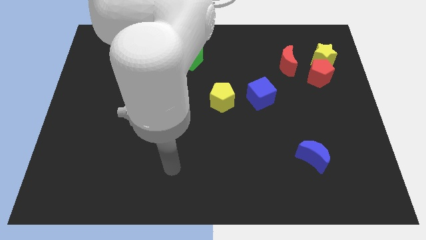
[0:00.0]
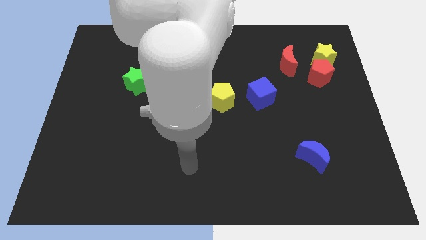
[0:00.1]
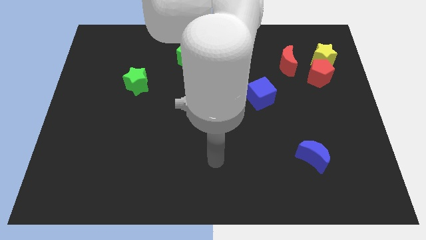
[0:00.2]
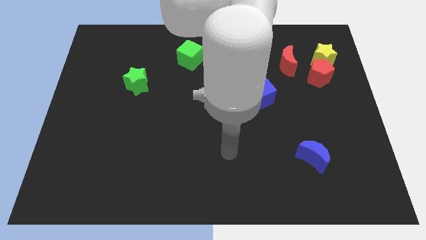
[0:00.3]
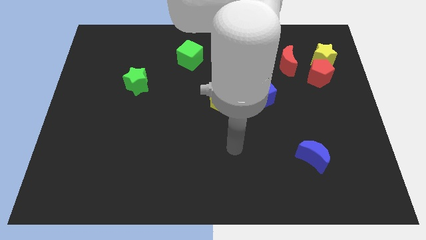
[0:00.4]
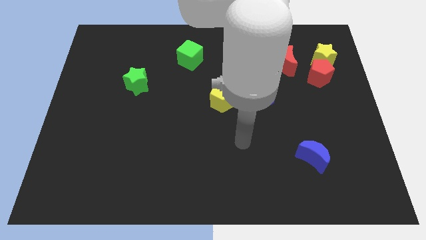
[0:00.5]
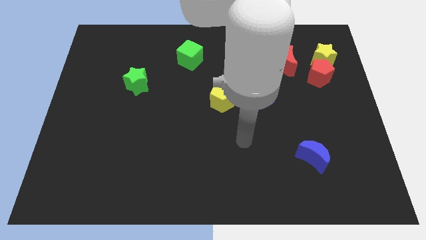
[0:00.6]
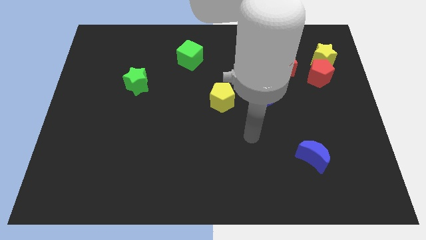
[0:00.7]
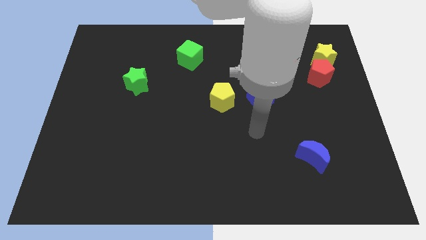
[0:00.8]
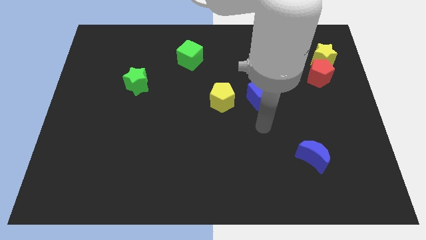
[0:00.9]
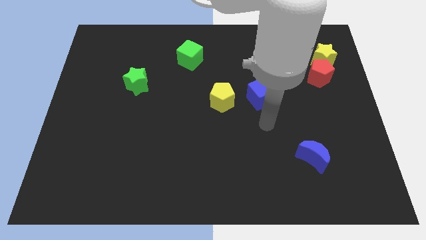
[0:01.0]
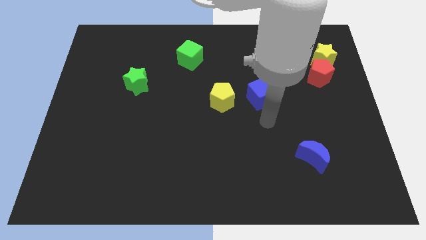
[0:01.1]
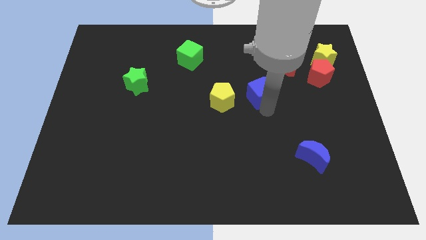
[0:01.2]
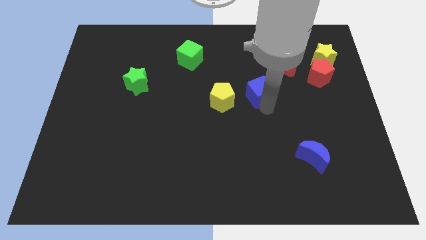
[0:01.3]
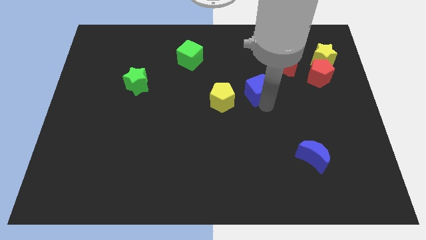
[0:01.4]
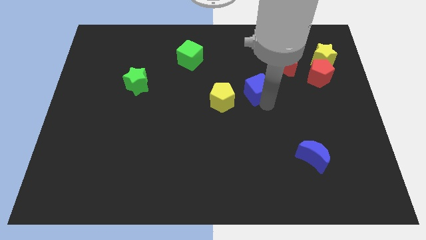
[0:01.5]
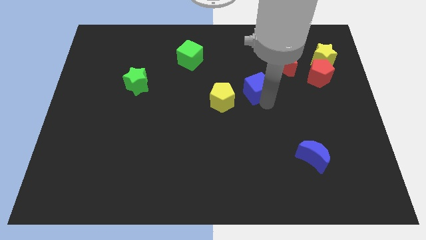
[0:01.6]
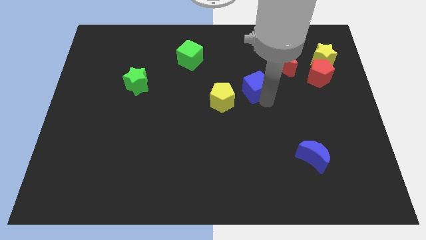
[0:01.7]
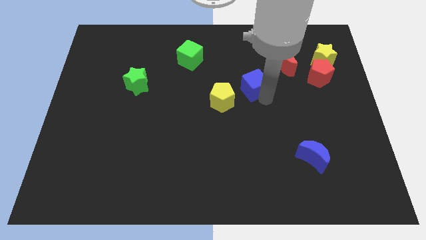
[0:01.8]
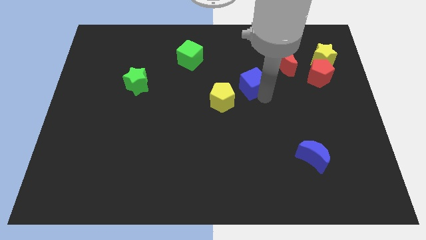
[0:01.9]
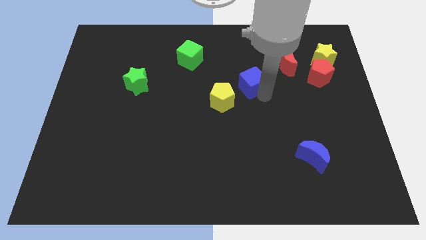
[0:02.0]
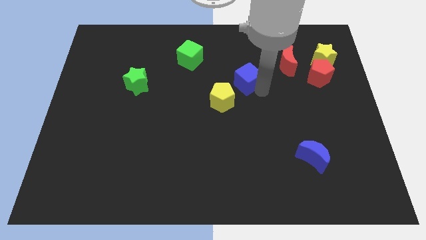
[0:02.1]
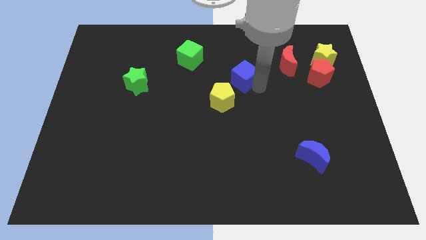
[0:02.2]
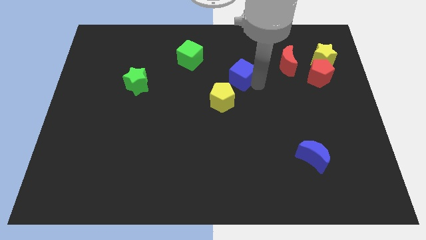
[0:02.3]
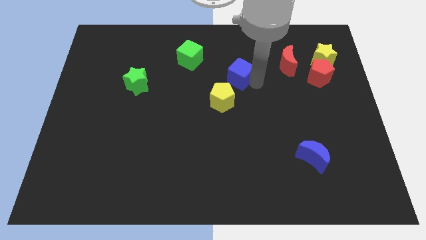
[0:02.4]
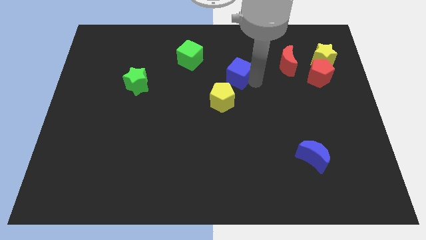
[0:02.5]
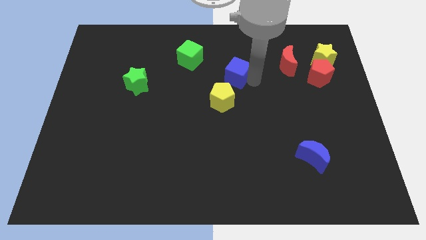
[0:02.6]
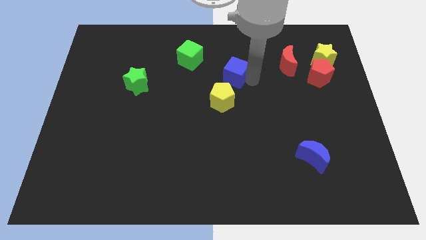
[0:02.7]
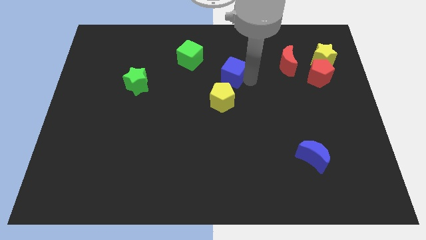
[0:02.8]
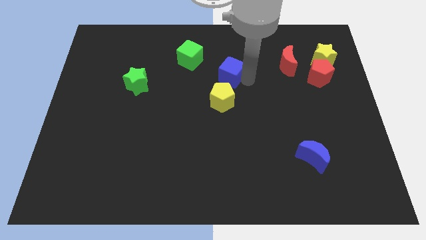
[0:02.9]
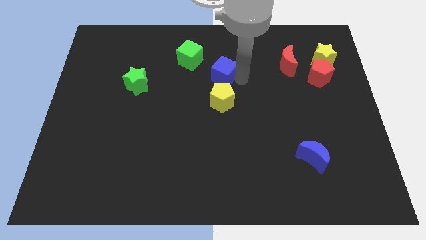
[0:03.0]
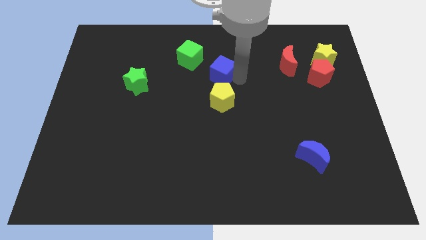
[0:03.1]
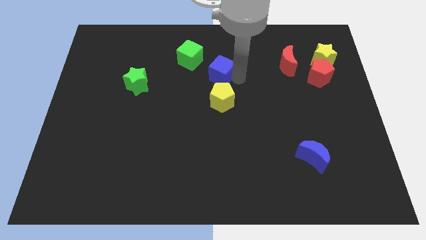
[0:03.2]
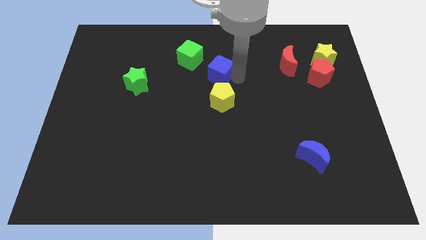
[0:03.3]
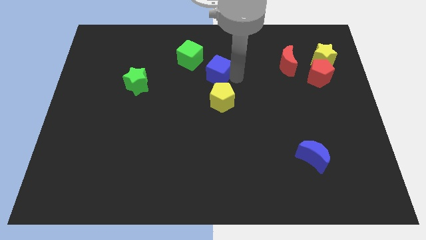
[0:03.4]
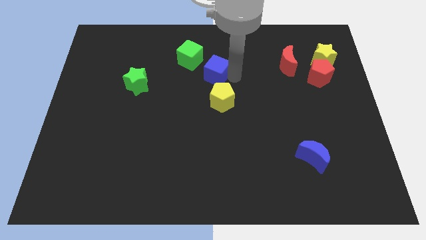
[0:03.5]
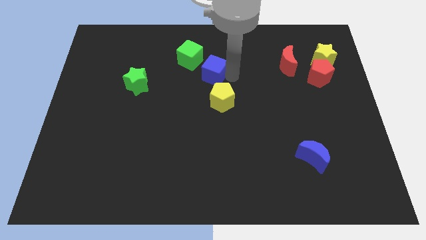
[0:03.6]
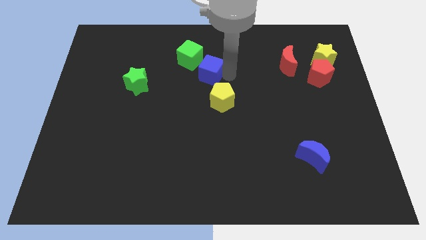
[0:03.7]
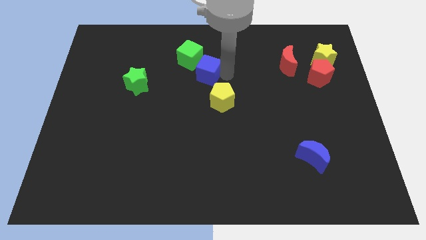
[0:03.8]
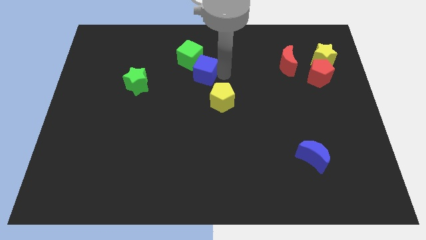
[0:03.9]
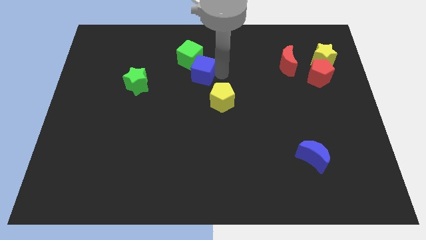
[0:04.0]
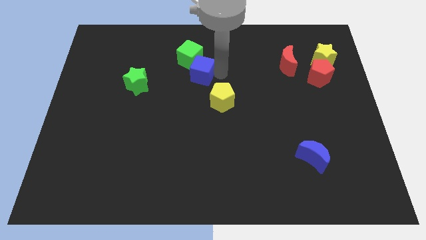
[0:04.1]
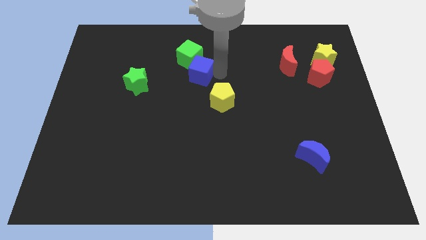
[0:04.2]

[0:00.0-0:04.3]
push the blue cube towards the green cube

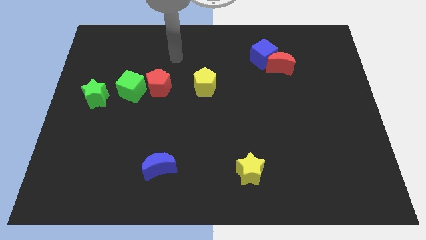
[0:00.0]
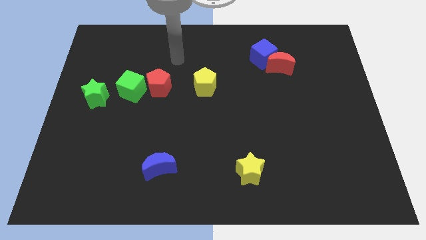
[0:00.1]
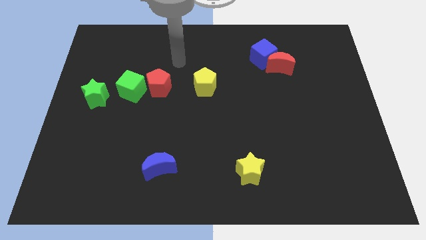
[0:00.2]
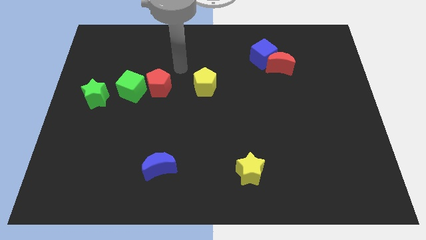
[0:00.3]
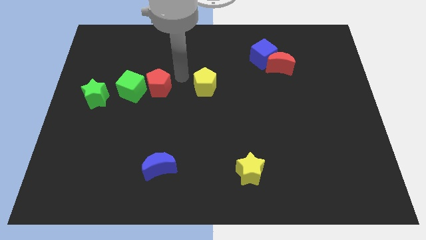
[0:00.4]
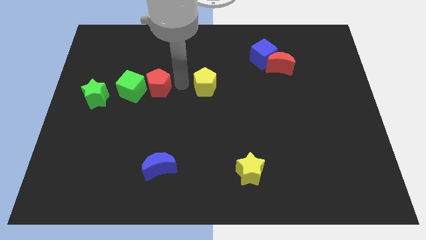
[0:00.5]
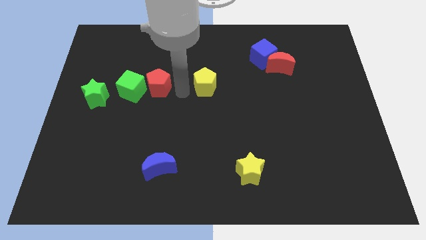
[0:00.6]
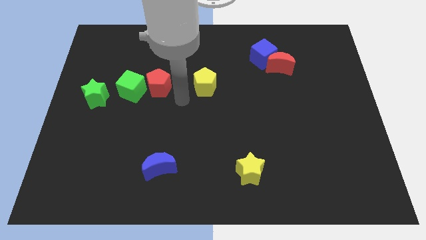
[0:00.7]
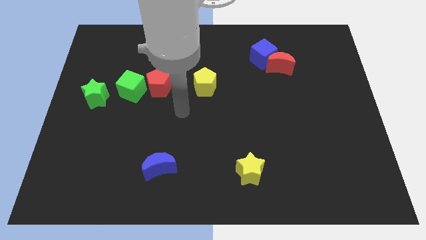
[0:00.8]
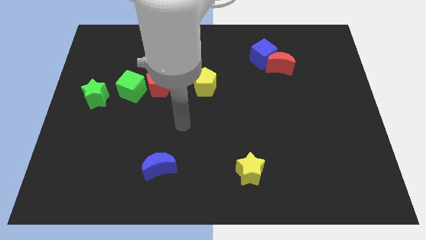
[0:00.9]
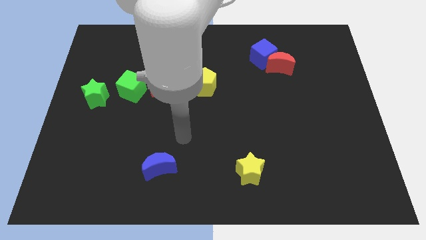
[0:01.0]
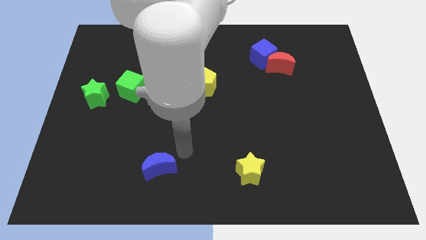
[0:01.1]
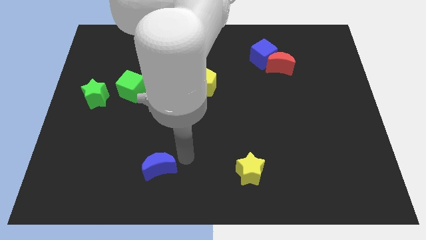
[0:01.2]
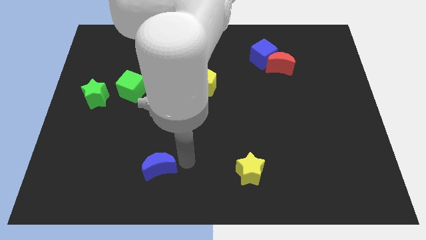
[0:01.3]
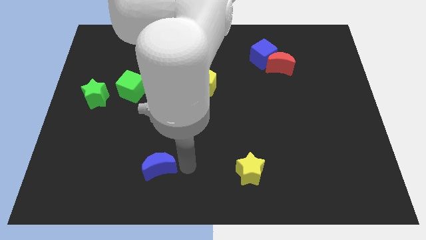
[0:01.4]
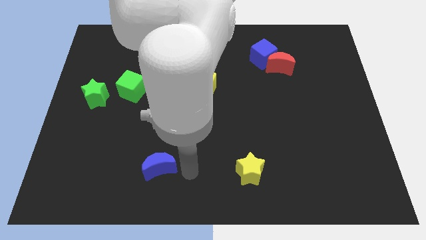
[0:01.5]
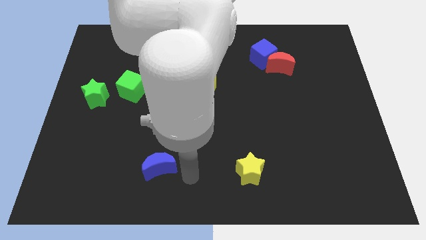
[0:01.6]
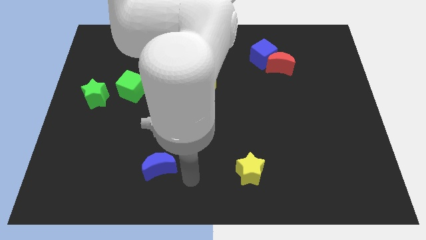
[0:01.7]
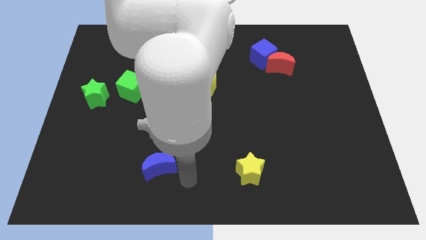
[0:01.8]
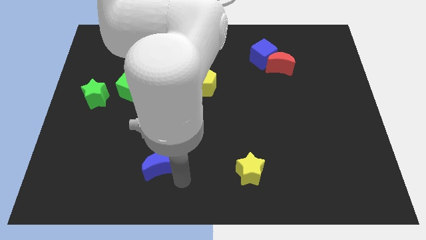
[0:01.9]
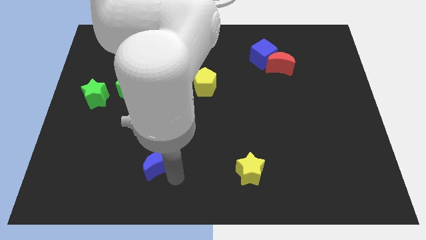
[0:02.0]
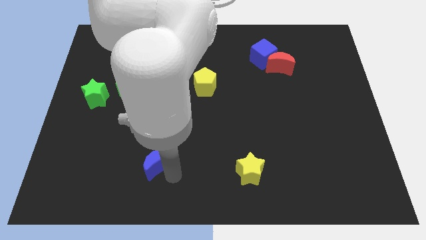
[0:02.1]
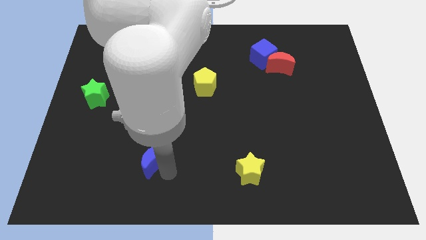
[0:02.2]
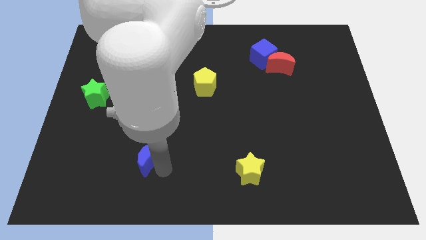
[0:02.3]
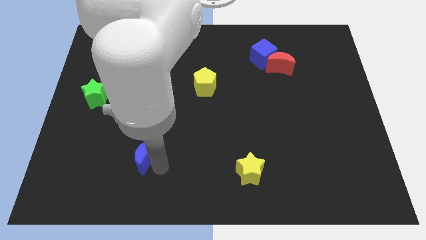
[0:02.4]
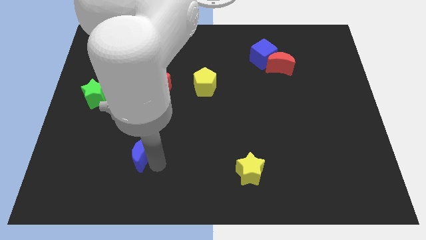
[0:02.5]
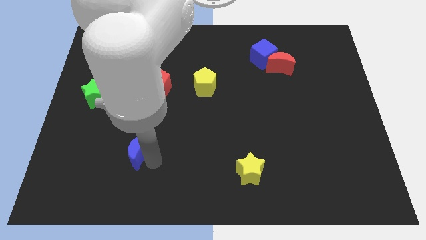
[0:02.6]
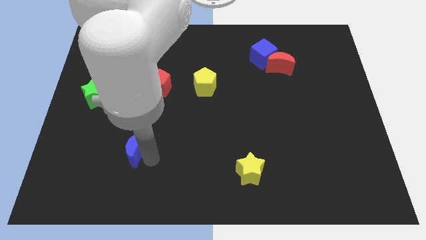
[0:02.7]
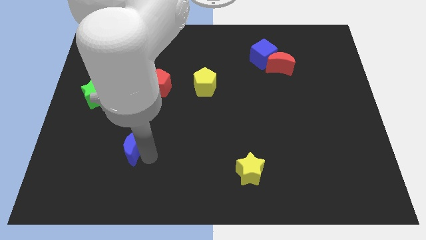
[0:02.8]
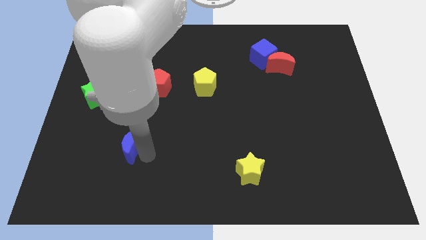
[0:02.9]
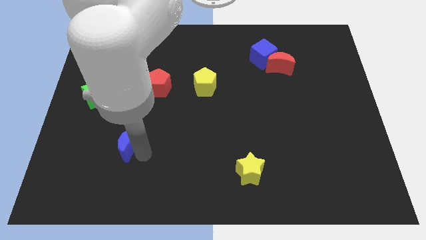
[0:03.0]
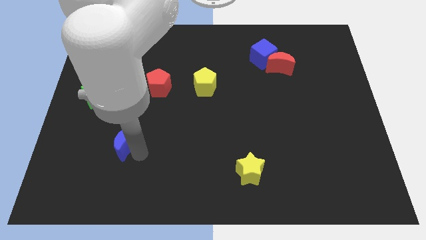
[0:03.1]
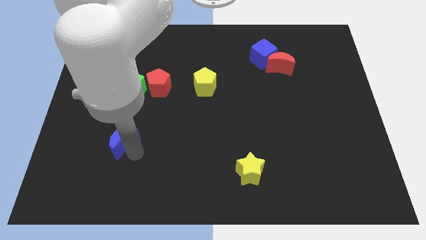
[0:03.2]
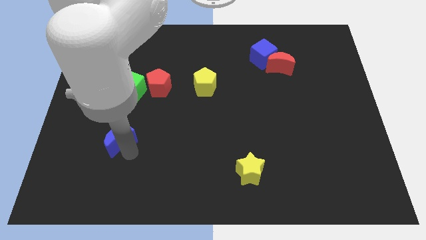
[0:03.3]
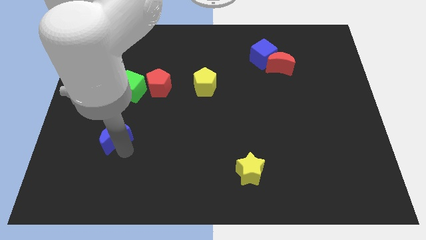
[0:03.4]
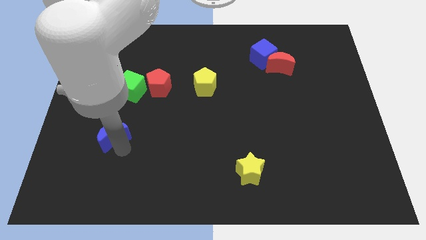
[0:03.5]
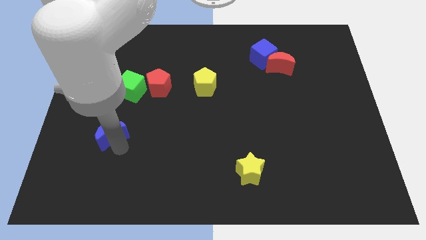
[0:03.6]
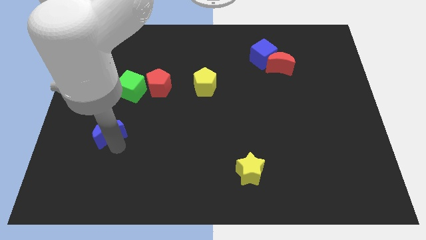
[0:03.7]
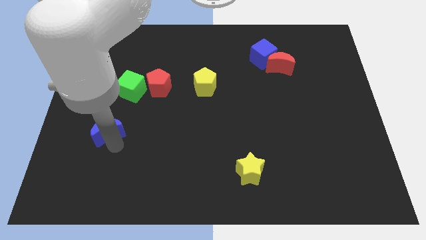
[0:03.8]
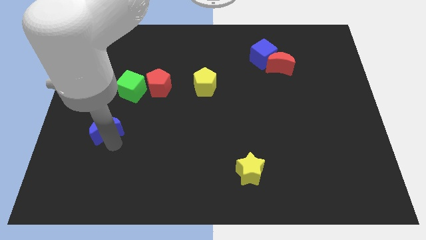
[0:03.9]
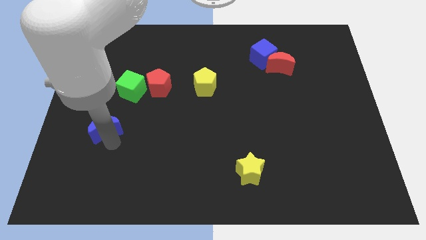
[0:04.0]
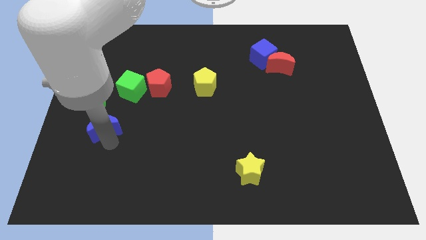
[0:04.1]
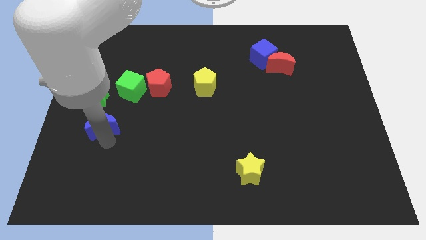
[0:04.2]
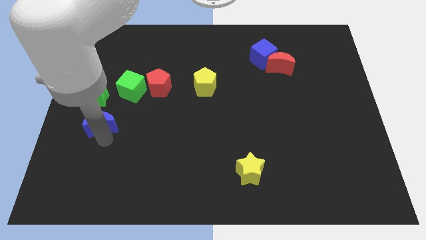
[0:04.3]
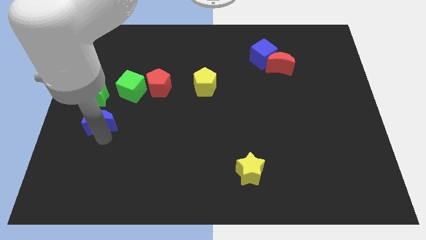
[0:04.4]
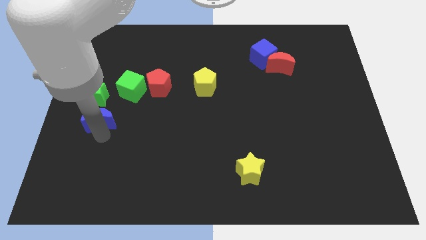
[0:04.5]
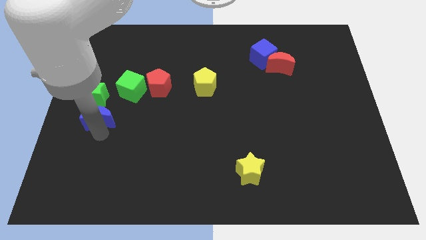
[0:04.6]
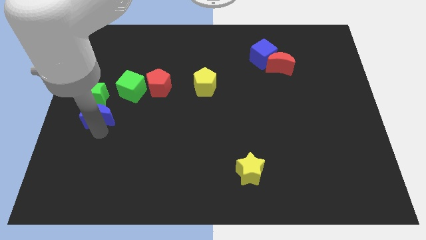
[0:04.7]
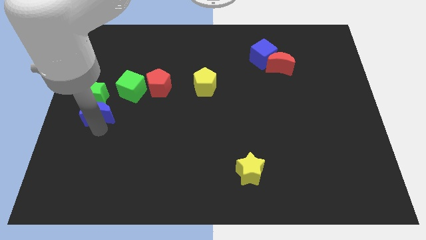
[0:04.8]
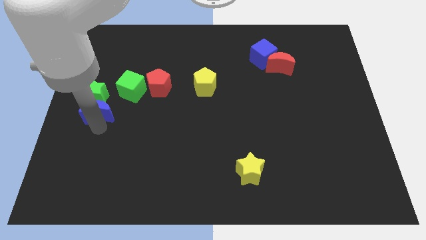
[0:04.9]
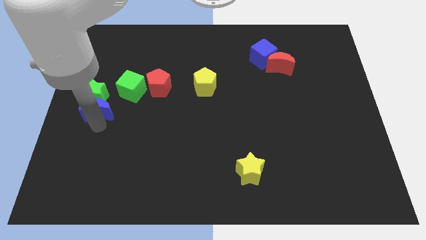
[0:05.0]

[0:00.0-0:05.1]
move the blue moon towards the green star
